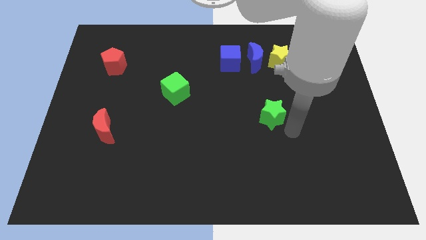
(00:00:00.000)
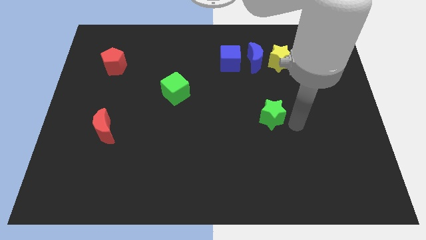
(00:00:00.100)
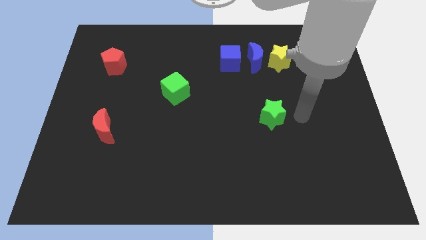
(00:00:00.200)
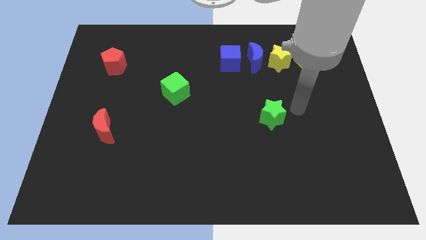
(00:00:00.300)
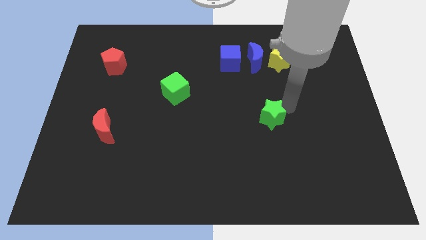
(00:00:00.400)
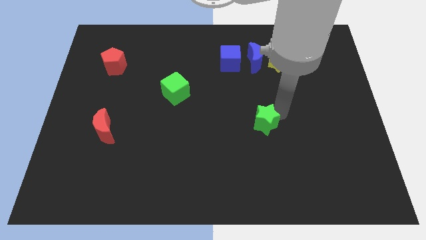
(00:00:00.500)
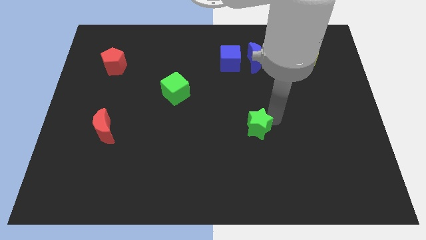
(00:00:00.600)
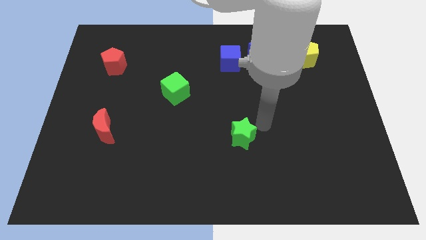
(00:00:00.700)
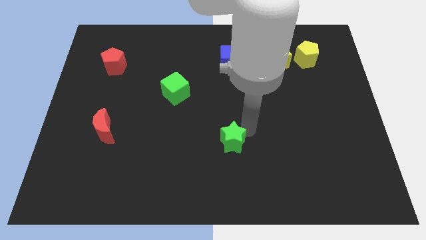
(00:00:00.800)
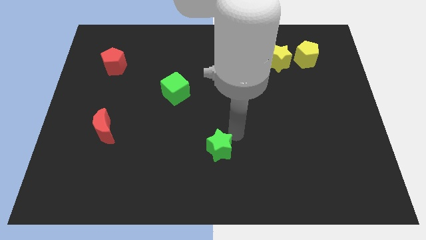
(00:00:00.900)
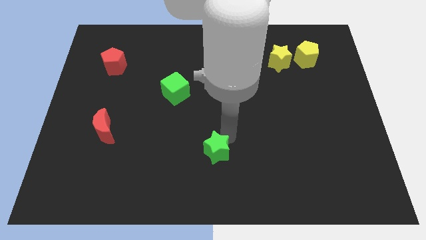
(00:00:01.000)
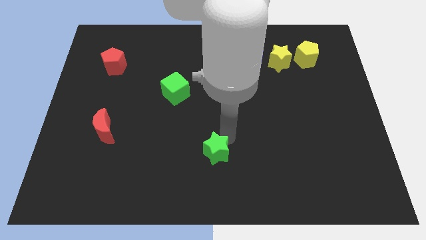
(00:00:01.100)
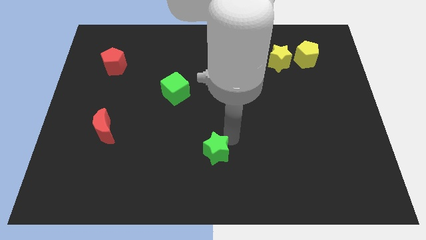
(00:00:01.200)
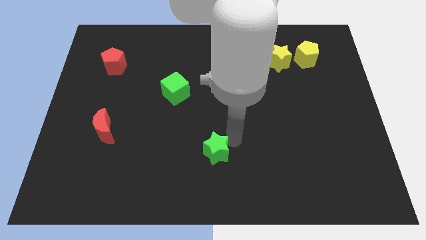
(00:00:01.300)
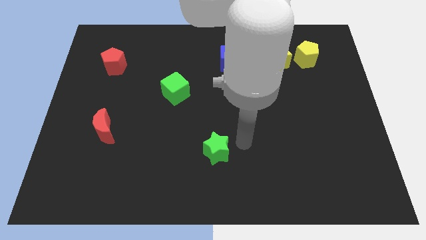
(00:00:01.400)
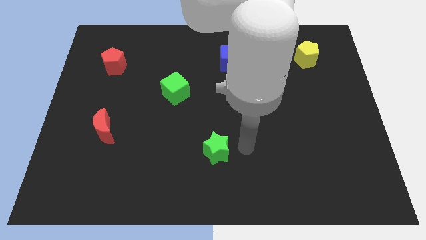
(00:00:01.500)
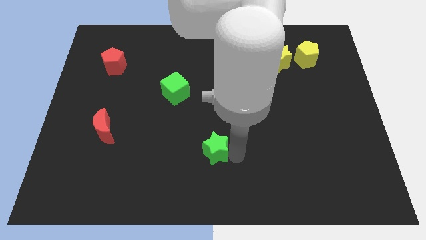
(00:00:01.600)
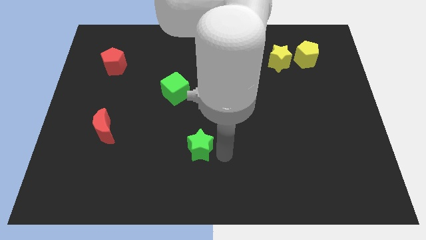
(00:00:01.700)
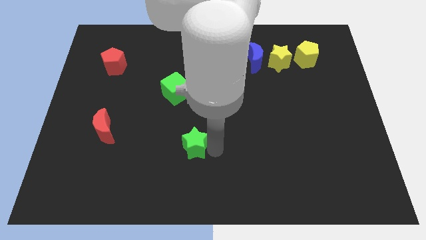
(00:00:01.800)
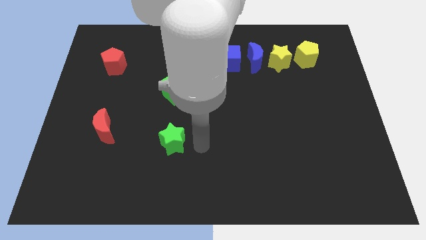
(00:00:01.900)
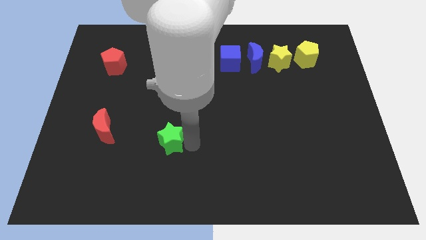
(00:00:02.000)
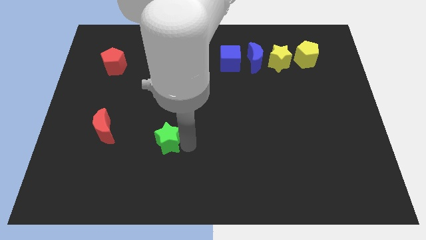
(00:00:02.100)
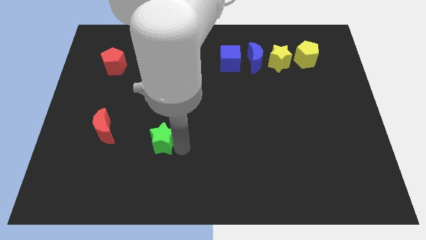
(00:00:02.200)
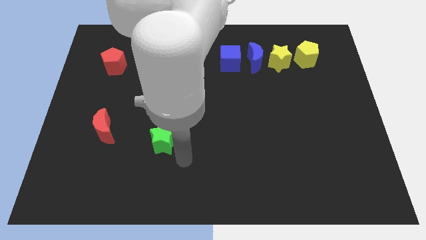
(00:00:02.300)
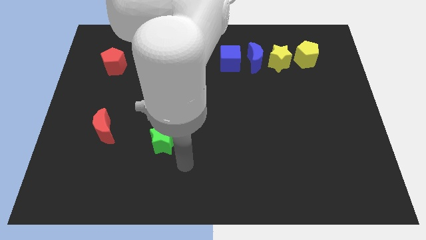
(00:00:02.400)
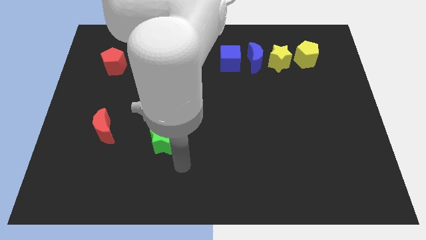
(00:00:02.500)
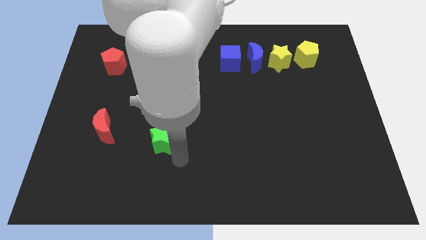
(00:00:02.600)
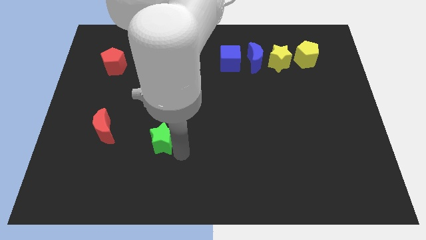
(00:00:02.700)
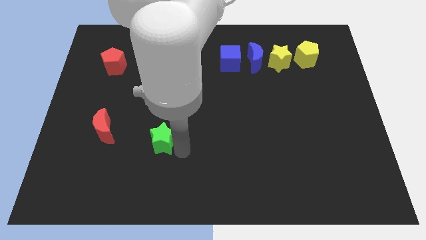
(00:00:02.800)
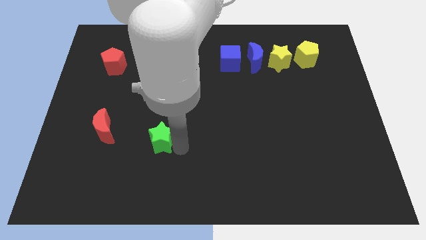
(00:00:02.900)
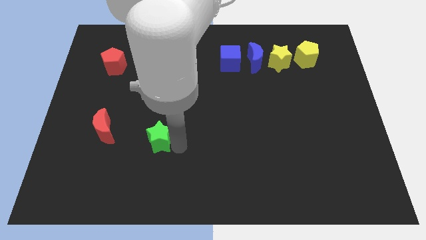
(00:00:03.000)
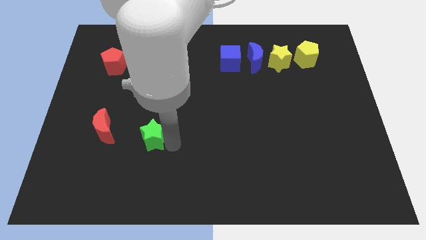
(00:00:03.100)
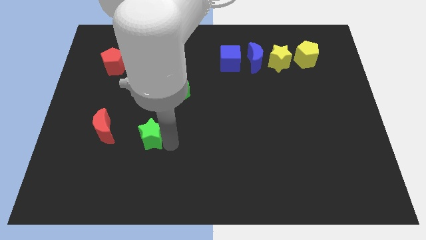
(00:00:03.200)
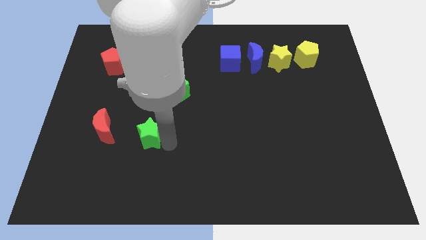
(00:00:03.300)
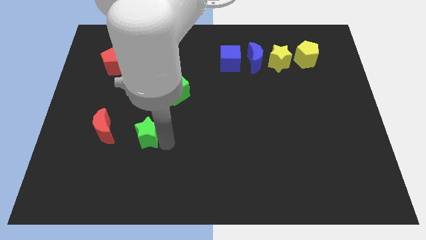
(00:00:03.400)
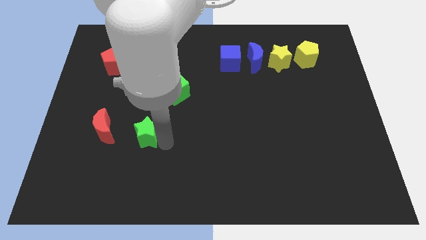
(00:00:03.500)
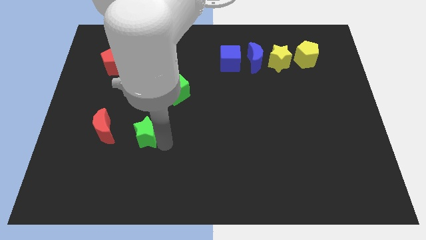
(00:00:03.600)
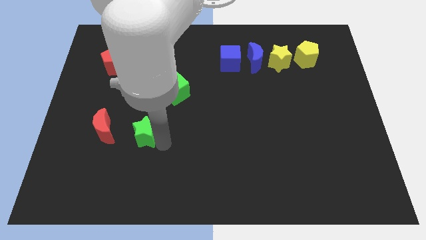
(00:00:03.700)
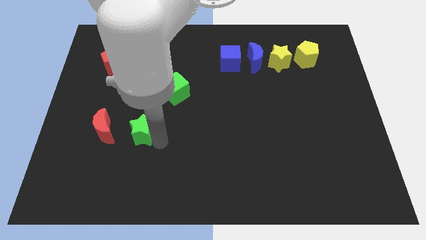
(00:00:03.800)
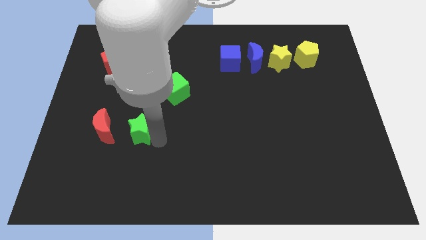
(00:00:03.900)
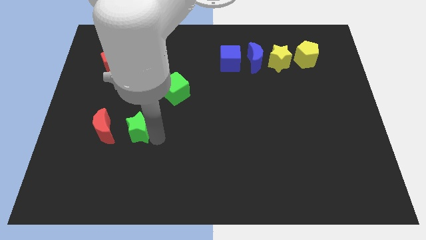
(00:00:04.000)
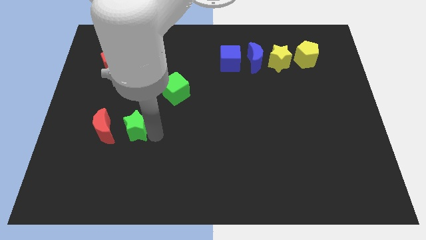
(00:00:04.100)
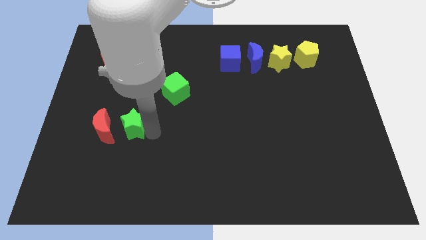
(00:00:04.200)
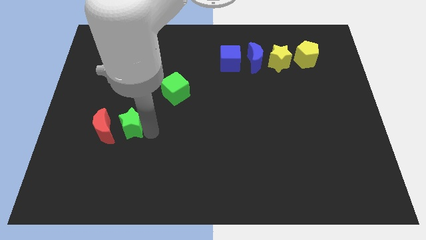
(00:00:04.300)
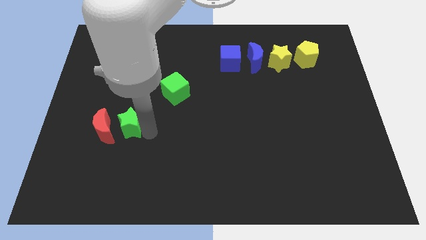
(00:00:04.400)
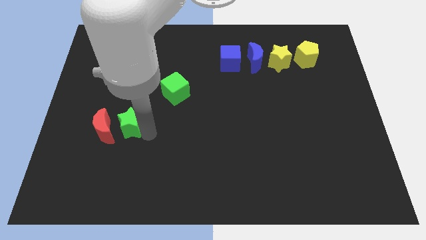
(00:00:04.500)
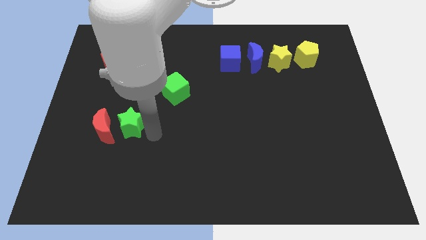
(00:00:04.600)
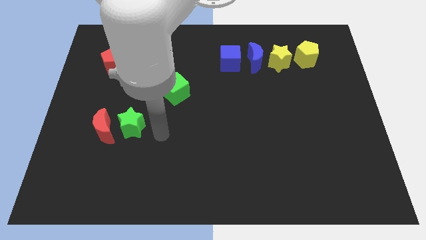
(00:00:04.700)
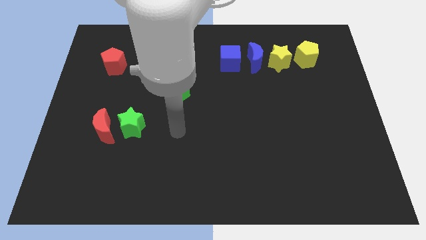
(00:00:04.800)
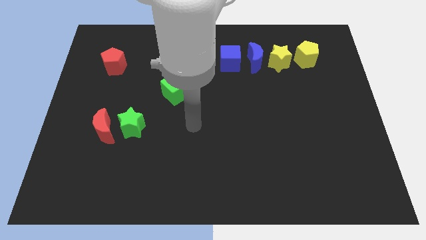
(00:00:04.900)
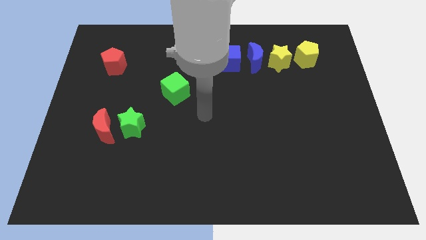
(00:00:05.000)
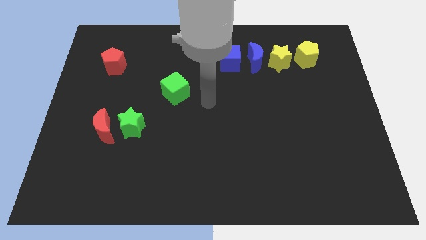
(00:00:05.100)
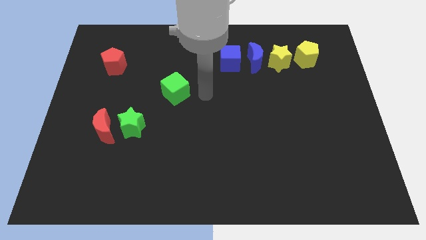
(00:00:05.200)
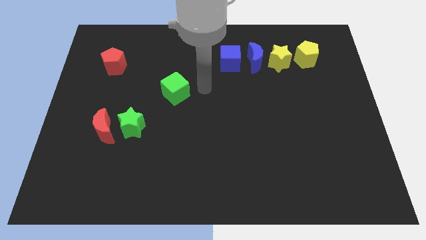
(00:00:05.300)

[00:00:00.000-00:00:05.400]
push the green star towards the red crescent

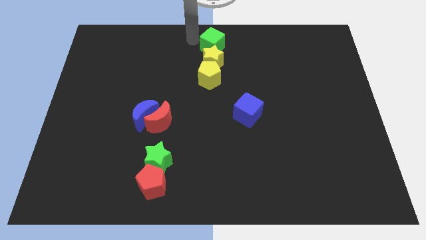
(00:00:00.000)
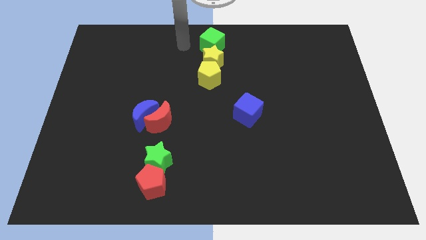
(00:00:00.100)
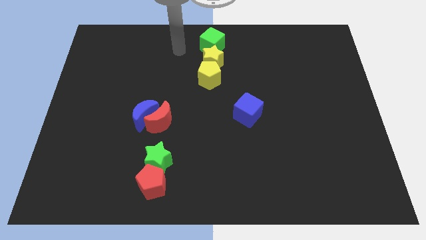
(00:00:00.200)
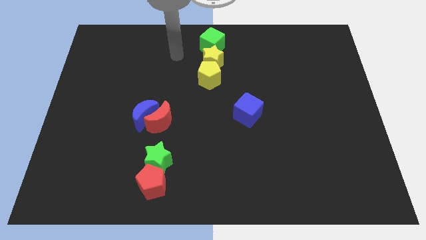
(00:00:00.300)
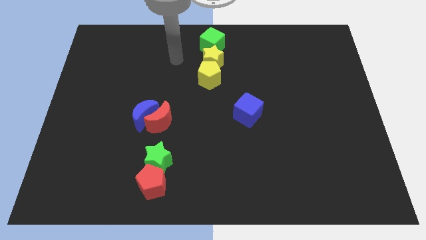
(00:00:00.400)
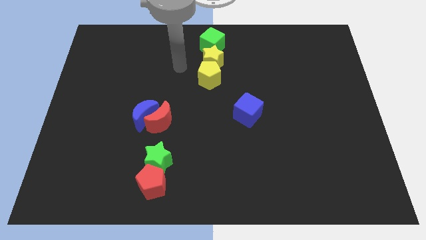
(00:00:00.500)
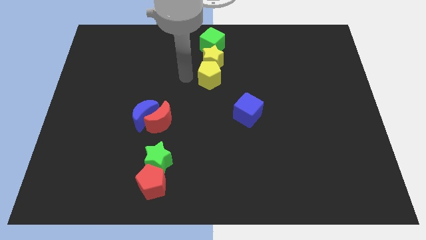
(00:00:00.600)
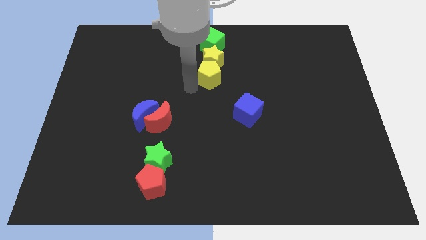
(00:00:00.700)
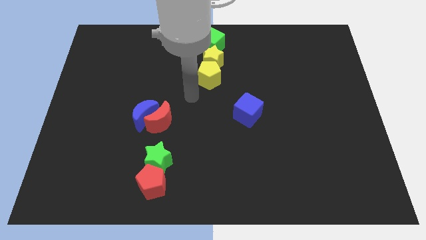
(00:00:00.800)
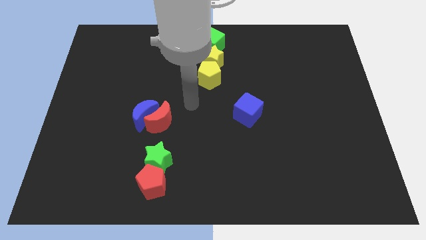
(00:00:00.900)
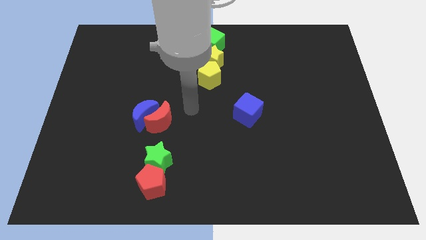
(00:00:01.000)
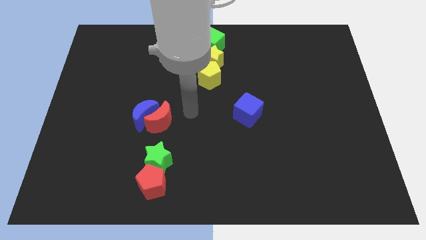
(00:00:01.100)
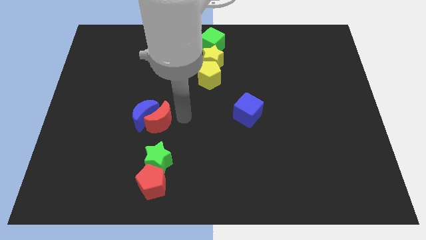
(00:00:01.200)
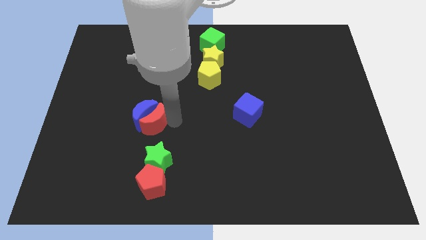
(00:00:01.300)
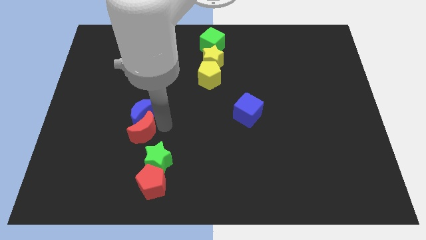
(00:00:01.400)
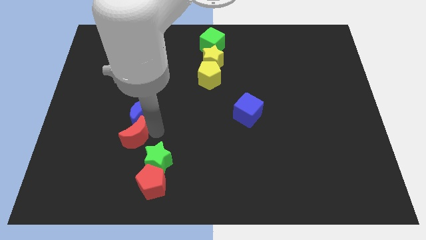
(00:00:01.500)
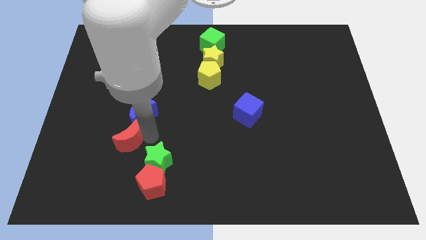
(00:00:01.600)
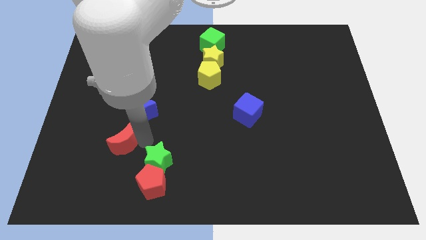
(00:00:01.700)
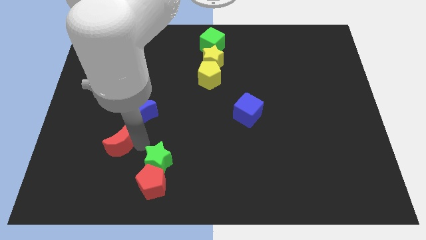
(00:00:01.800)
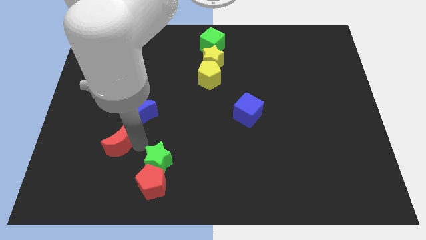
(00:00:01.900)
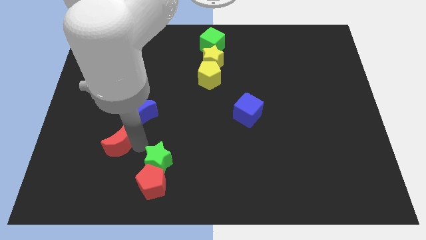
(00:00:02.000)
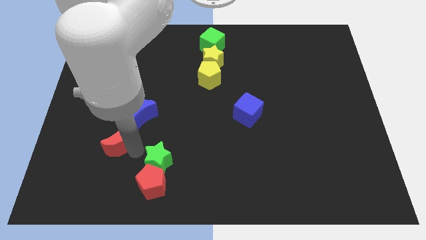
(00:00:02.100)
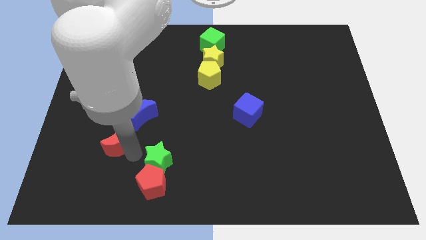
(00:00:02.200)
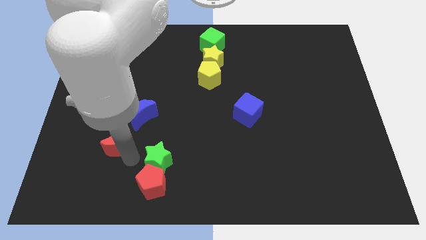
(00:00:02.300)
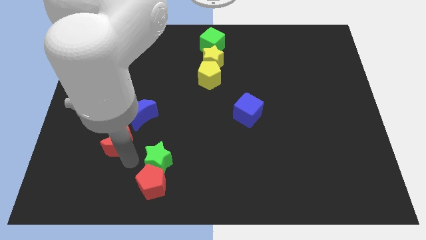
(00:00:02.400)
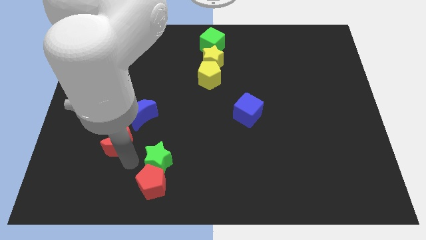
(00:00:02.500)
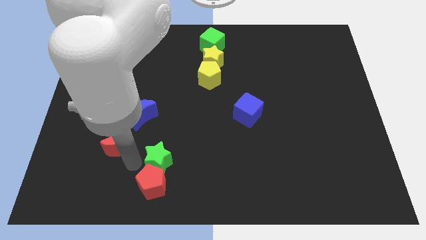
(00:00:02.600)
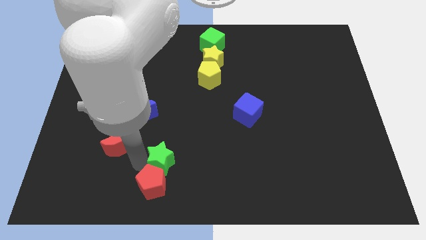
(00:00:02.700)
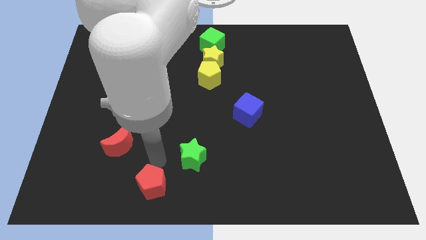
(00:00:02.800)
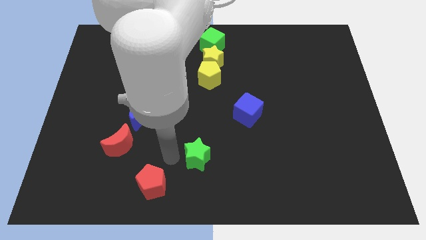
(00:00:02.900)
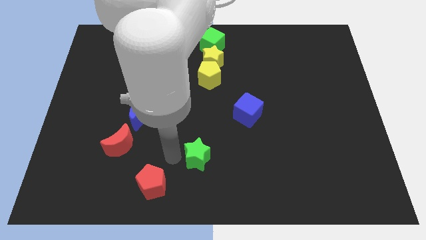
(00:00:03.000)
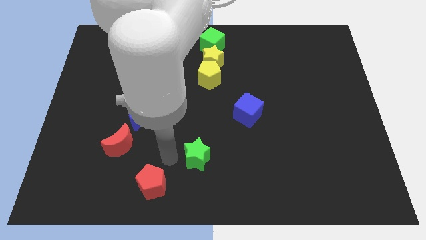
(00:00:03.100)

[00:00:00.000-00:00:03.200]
seperate red crescent from blue crescent

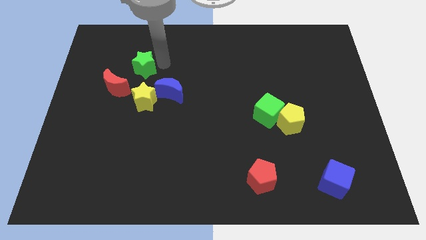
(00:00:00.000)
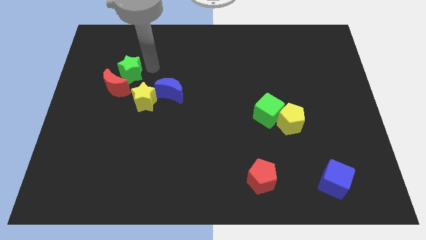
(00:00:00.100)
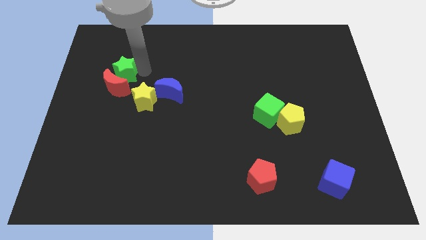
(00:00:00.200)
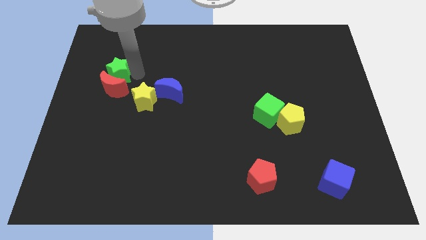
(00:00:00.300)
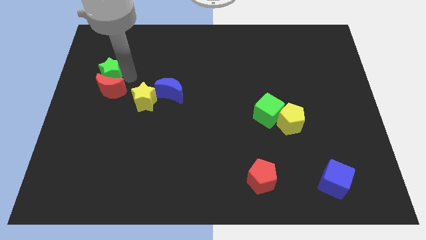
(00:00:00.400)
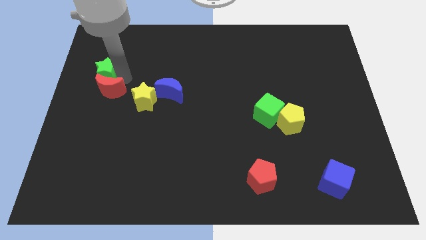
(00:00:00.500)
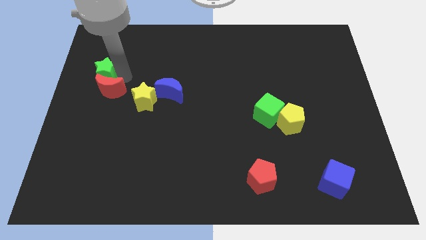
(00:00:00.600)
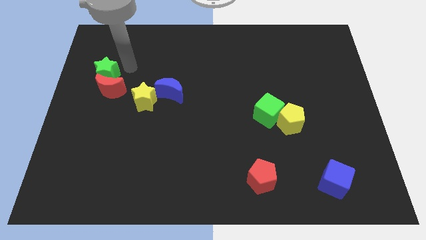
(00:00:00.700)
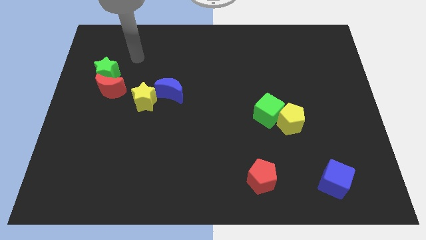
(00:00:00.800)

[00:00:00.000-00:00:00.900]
push the green star into the red moon
